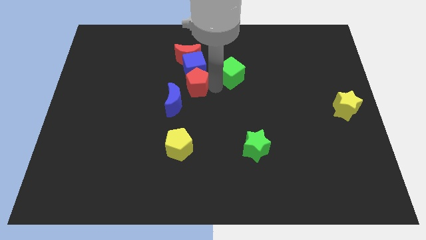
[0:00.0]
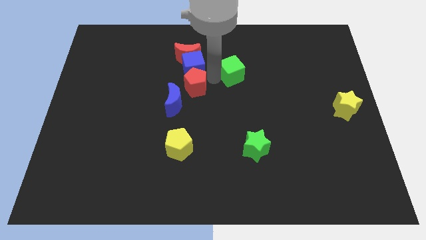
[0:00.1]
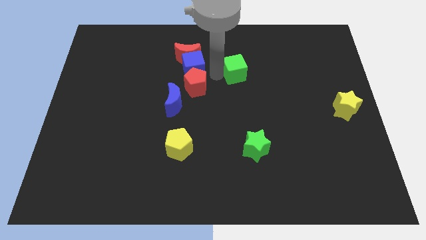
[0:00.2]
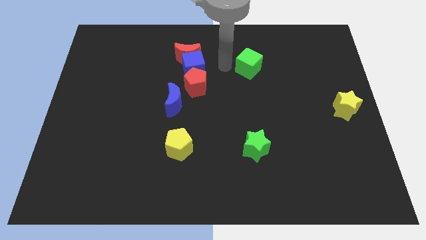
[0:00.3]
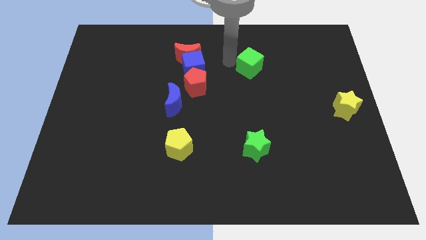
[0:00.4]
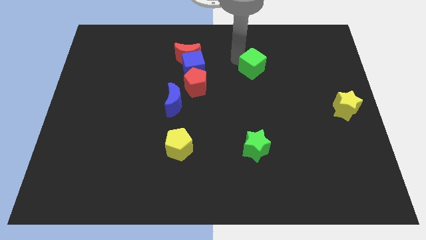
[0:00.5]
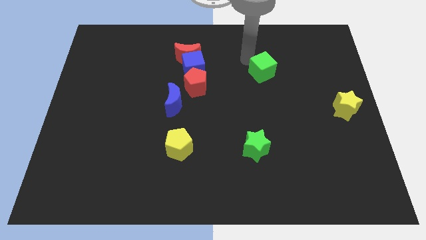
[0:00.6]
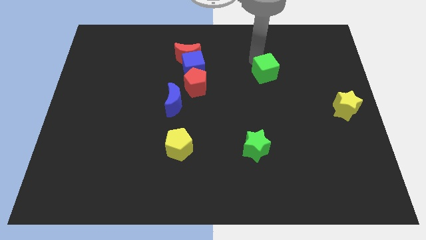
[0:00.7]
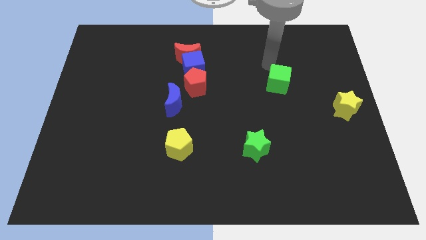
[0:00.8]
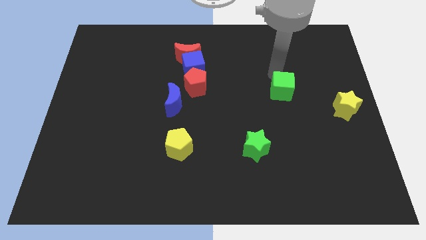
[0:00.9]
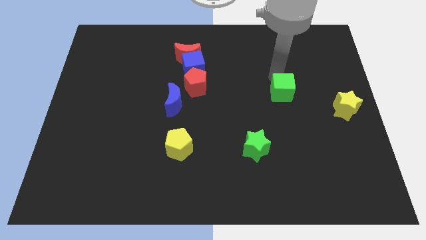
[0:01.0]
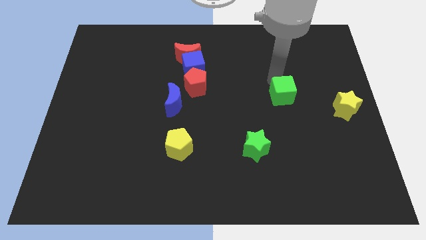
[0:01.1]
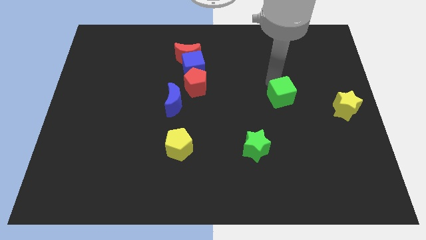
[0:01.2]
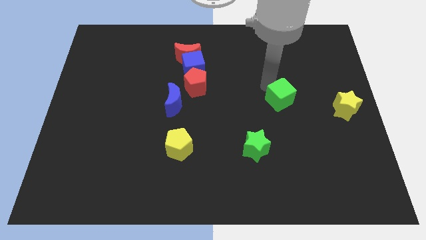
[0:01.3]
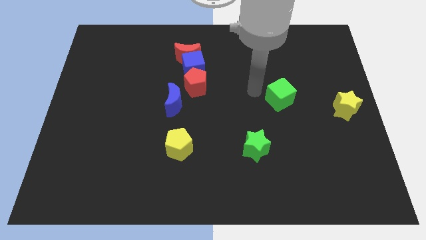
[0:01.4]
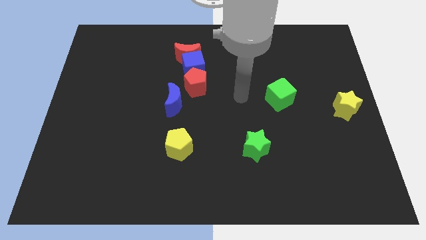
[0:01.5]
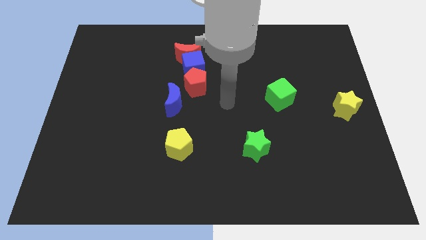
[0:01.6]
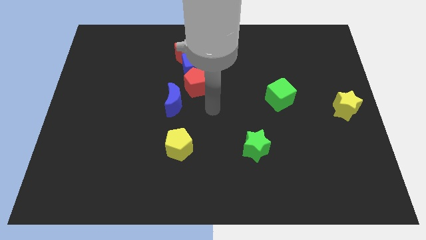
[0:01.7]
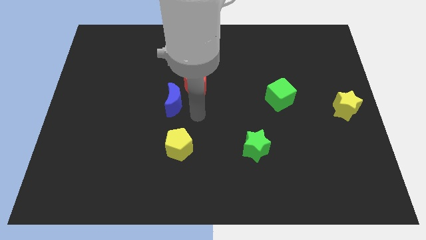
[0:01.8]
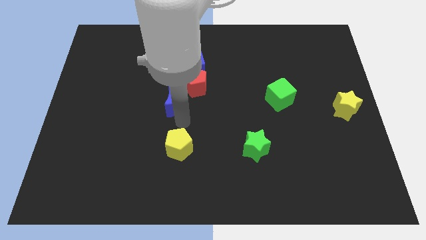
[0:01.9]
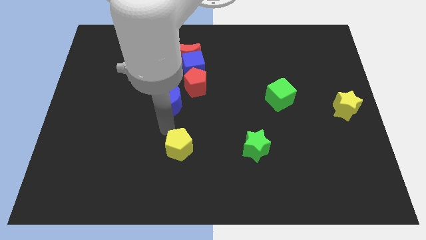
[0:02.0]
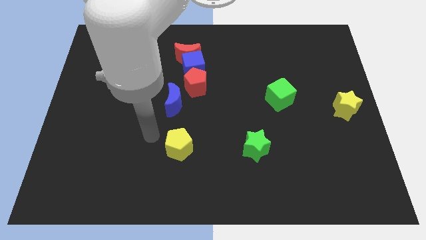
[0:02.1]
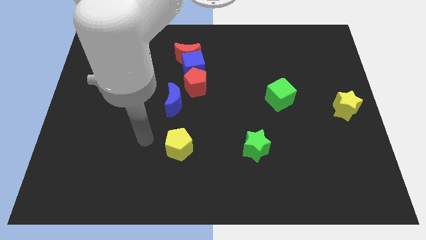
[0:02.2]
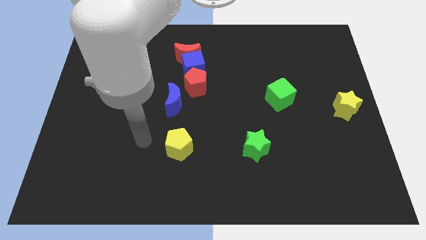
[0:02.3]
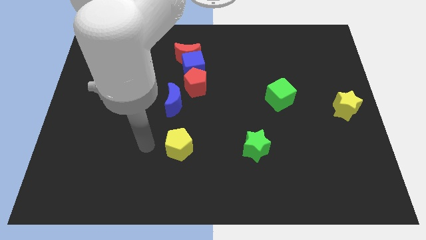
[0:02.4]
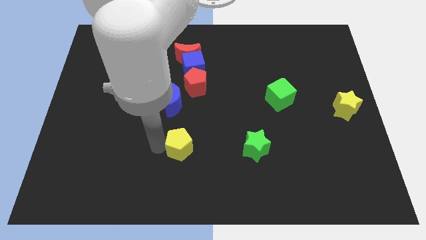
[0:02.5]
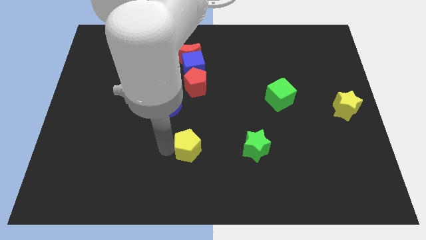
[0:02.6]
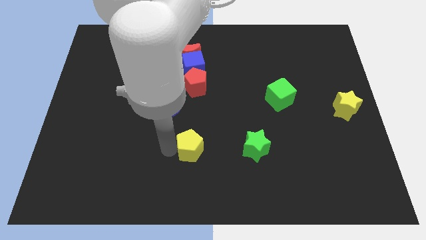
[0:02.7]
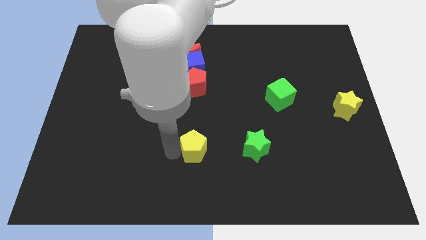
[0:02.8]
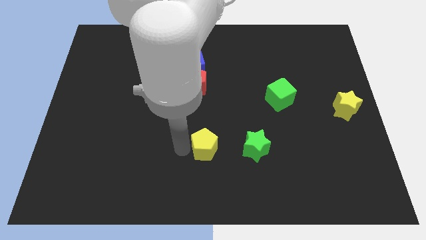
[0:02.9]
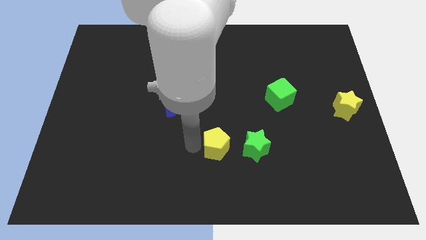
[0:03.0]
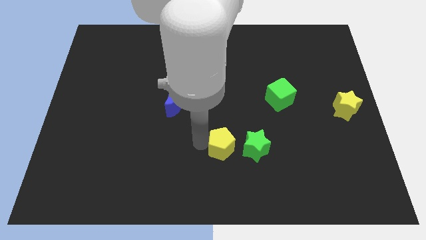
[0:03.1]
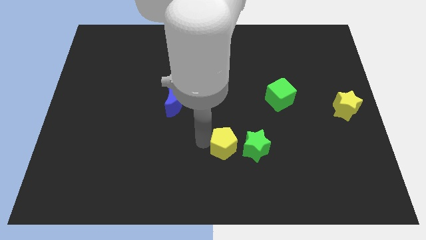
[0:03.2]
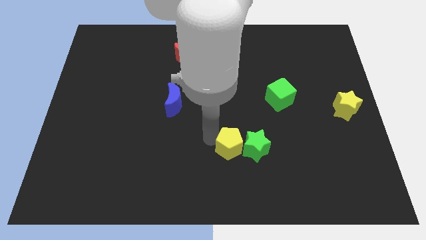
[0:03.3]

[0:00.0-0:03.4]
push the green cube and yellow pentagon slightly to the right side of the board

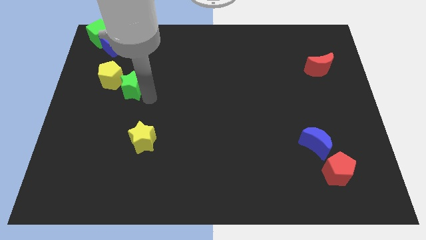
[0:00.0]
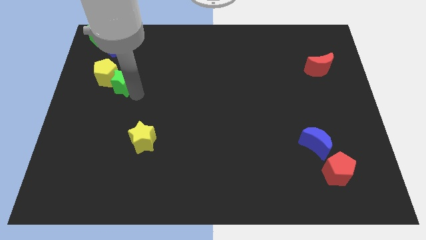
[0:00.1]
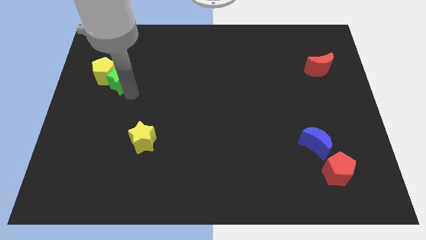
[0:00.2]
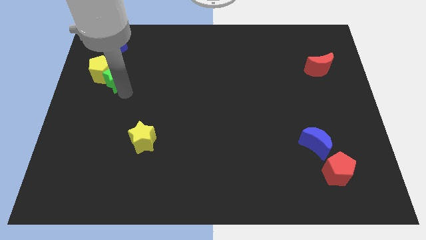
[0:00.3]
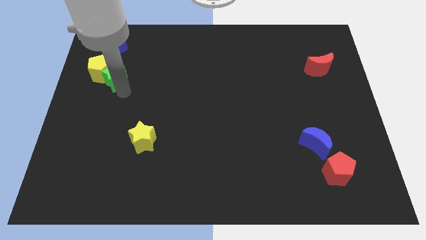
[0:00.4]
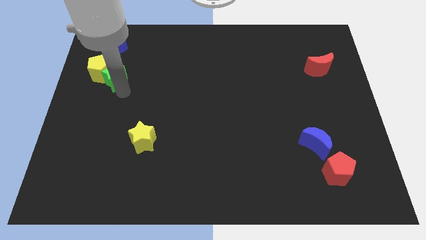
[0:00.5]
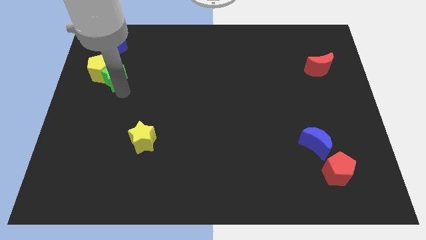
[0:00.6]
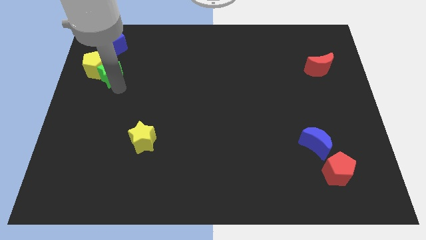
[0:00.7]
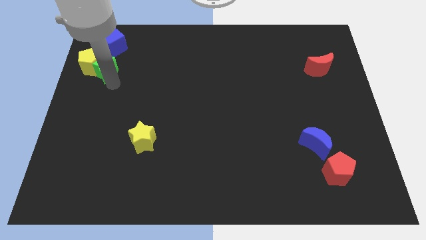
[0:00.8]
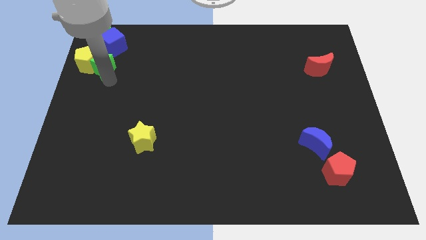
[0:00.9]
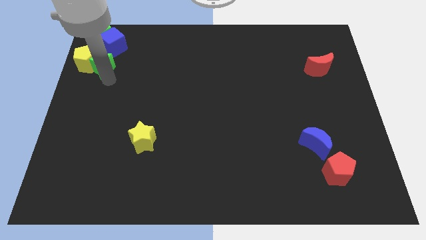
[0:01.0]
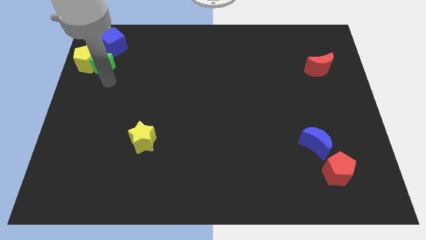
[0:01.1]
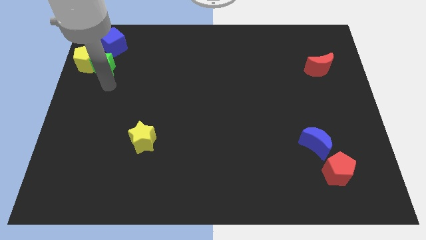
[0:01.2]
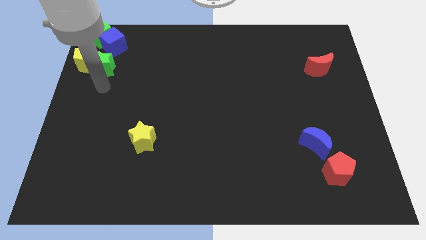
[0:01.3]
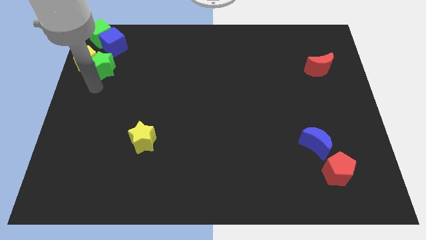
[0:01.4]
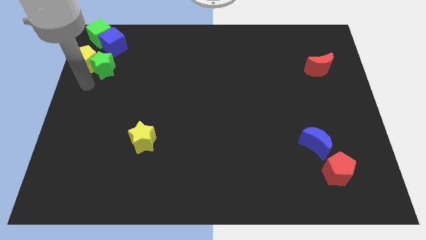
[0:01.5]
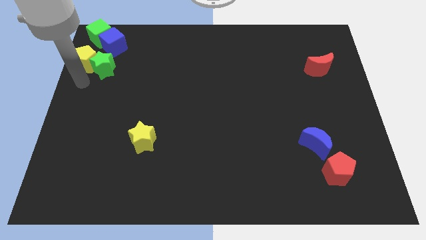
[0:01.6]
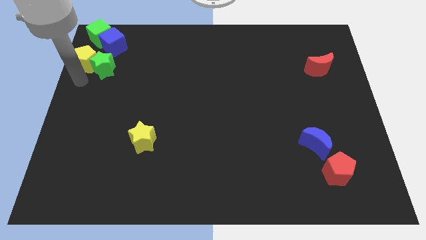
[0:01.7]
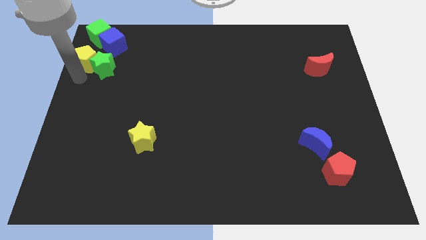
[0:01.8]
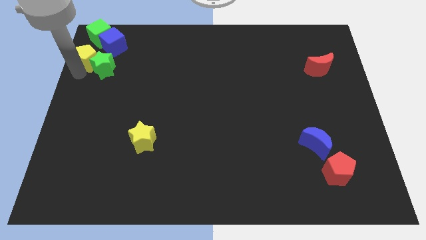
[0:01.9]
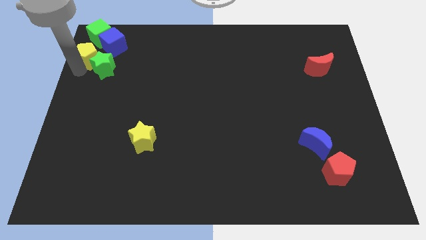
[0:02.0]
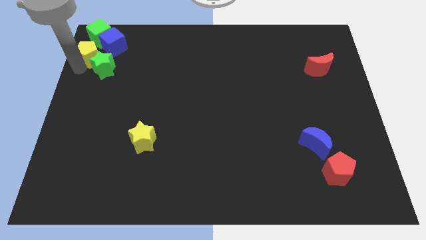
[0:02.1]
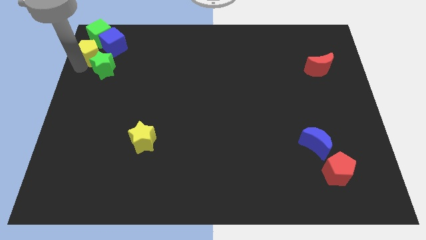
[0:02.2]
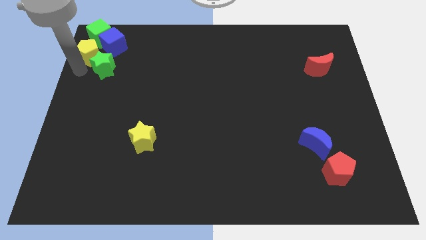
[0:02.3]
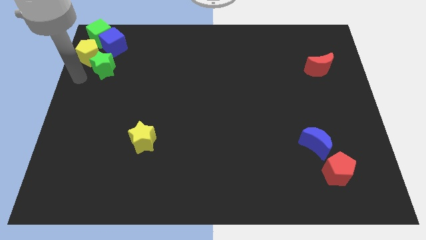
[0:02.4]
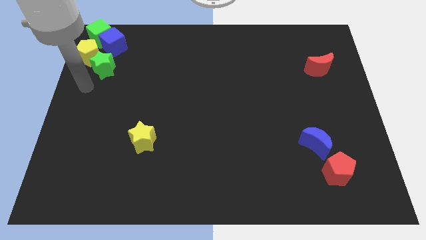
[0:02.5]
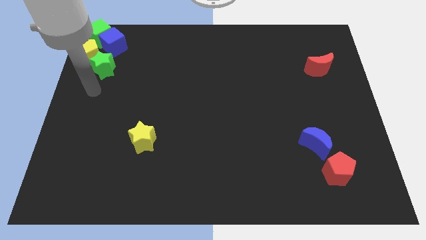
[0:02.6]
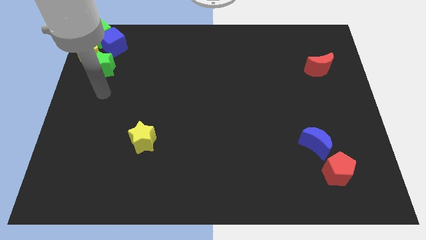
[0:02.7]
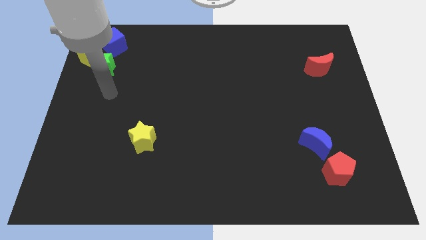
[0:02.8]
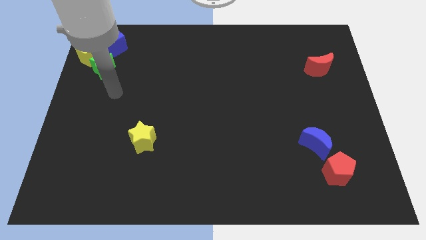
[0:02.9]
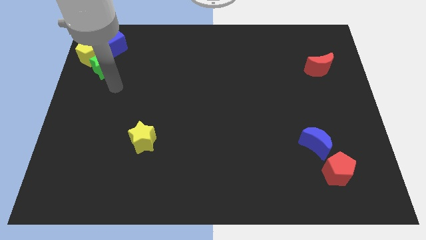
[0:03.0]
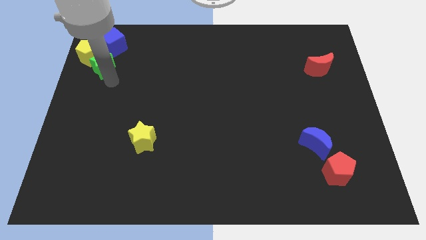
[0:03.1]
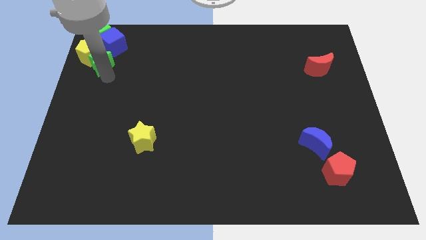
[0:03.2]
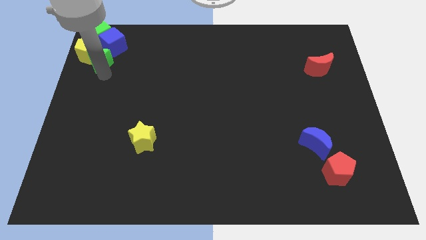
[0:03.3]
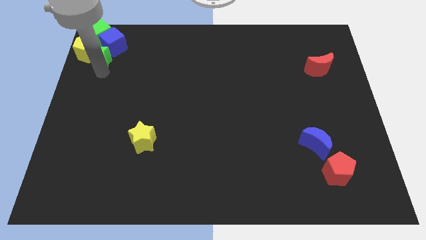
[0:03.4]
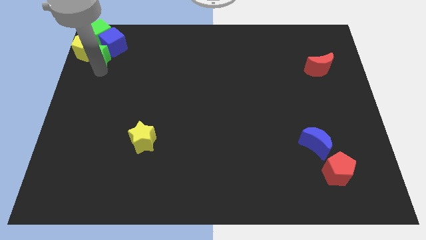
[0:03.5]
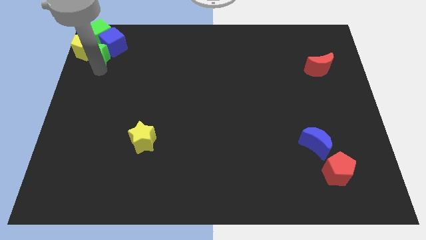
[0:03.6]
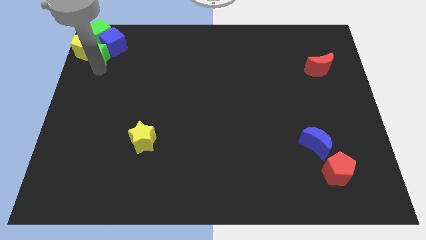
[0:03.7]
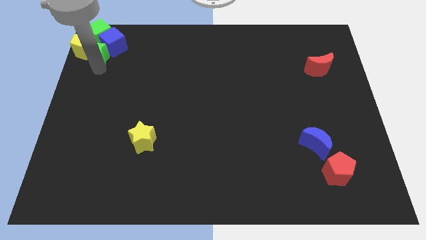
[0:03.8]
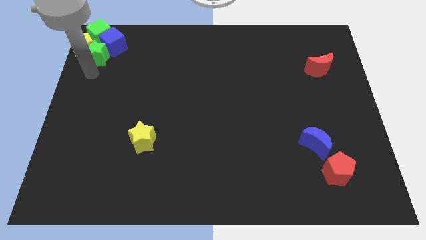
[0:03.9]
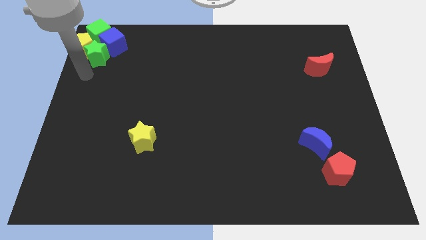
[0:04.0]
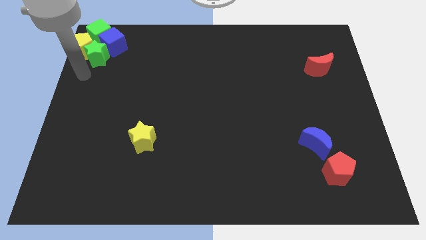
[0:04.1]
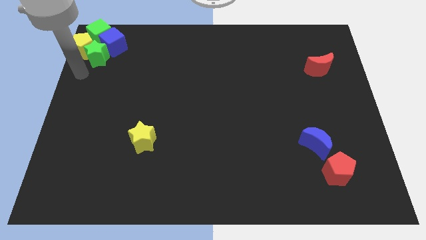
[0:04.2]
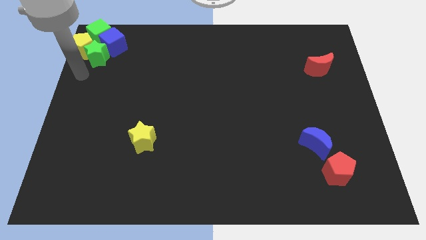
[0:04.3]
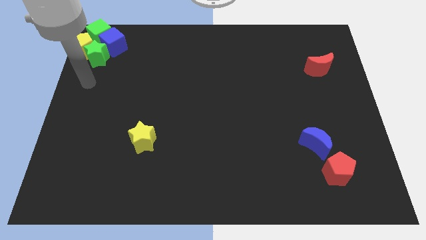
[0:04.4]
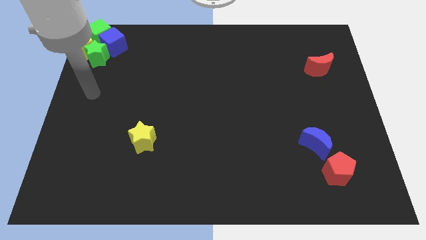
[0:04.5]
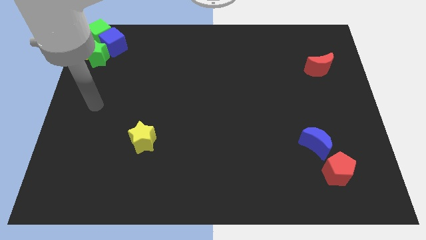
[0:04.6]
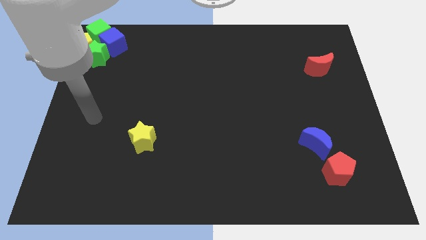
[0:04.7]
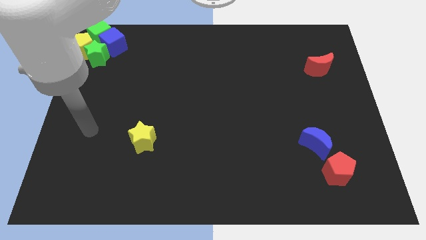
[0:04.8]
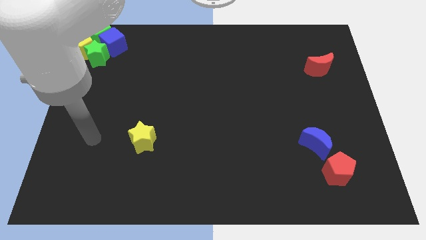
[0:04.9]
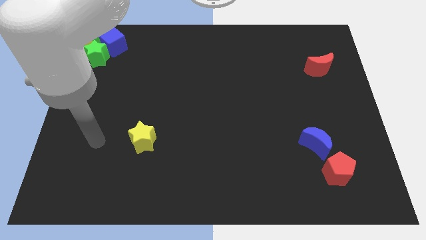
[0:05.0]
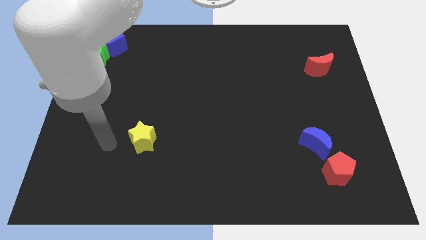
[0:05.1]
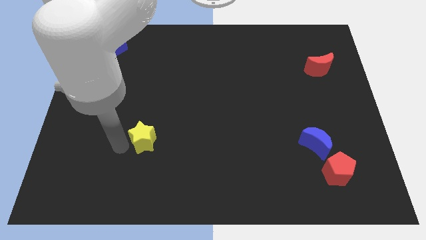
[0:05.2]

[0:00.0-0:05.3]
move the green star and yellow pentagon to the top left side

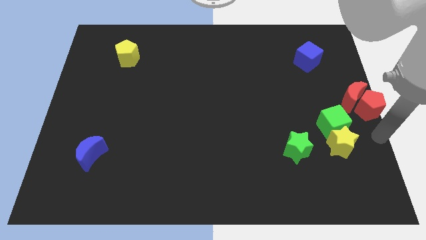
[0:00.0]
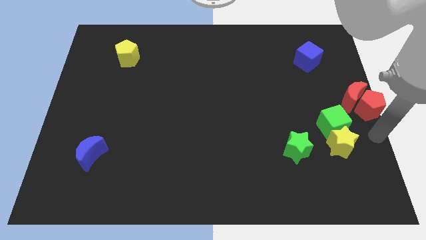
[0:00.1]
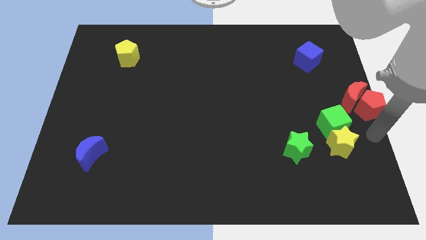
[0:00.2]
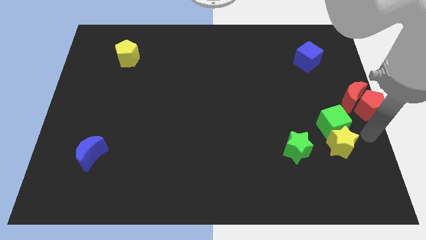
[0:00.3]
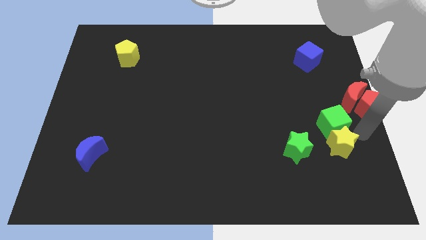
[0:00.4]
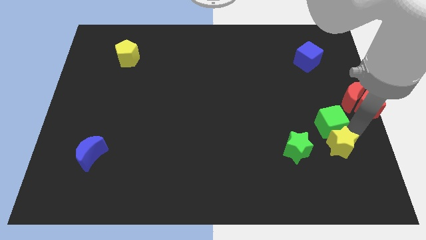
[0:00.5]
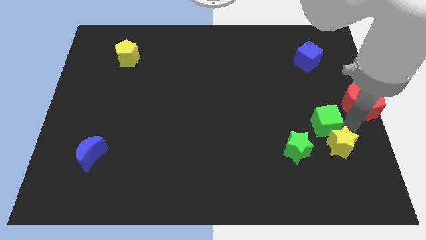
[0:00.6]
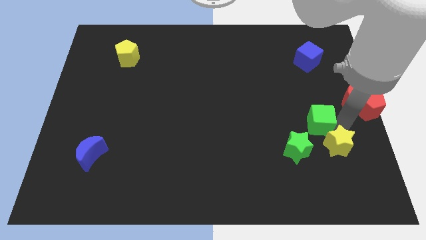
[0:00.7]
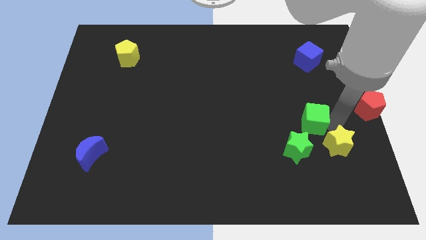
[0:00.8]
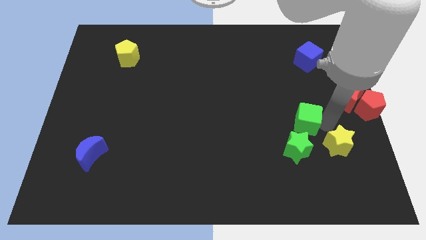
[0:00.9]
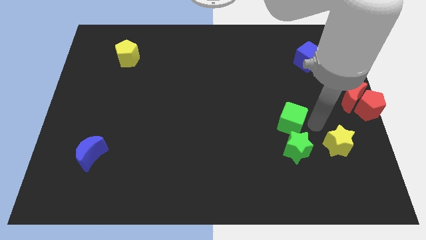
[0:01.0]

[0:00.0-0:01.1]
place the green cube above the green star
